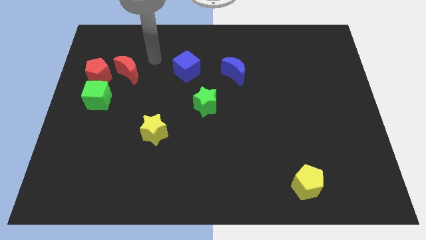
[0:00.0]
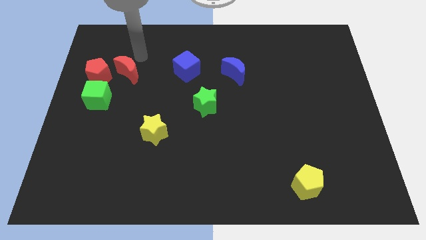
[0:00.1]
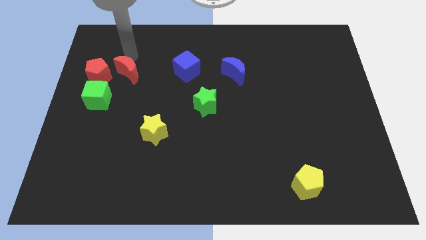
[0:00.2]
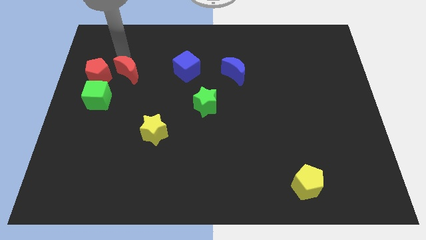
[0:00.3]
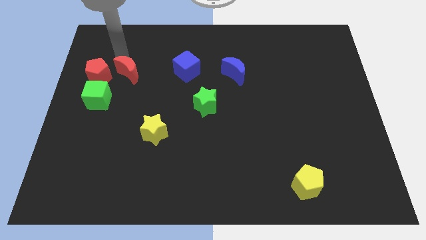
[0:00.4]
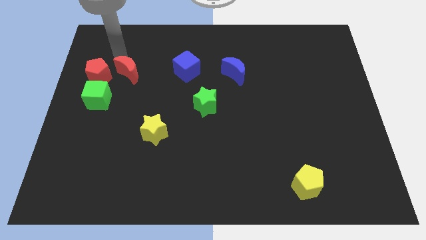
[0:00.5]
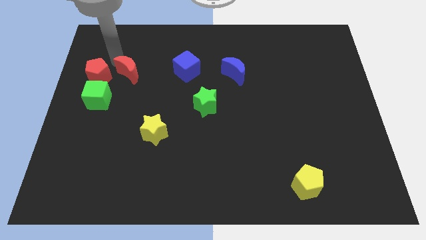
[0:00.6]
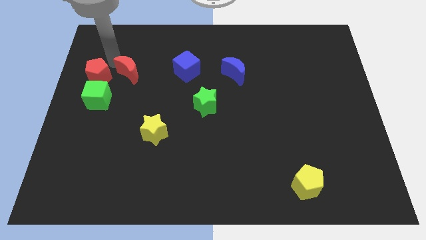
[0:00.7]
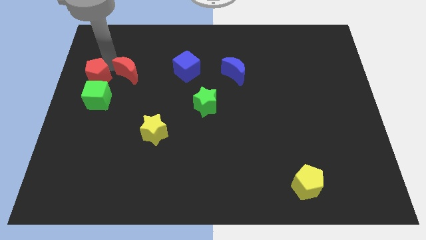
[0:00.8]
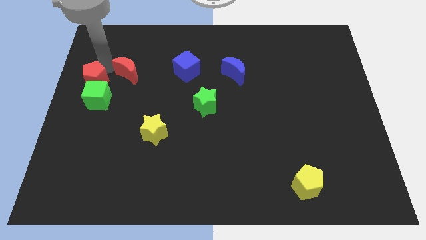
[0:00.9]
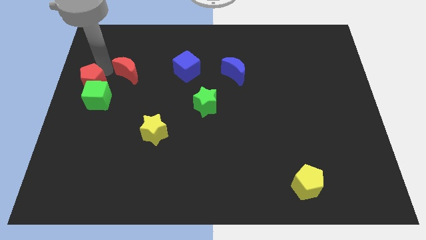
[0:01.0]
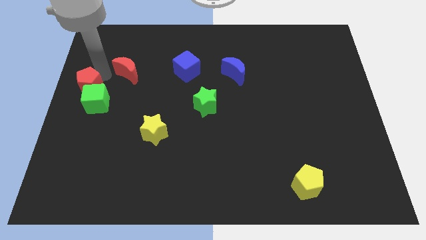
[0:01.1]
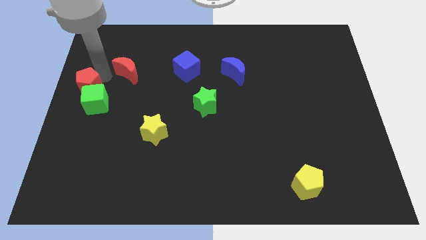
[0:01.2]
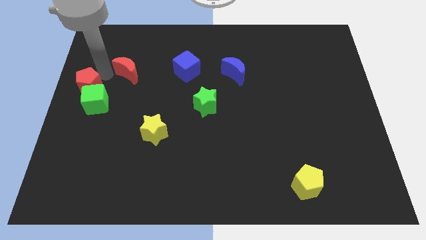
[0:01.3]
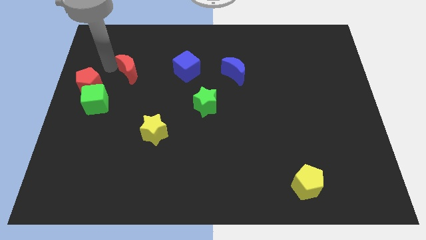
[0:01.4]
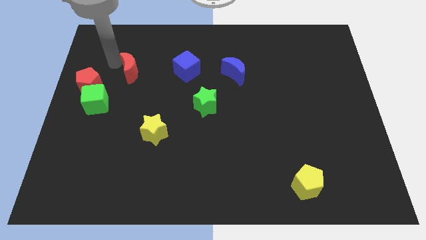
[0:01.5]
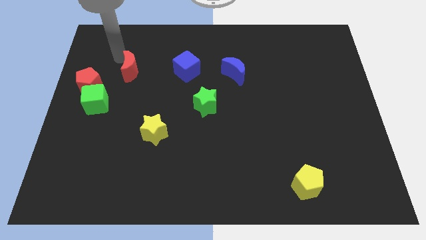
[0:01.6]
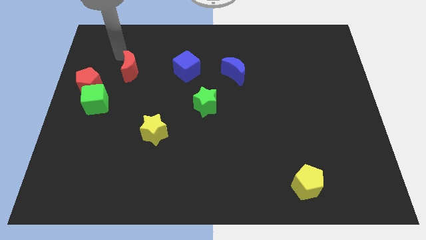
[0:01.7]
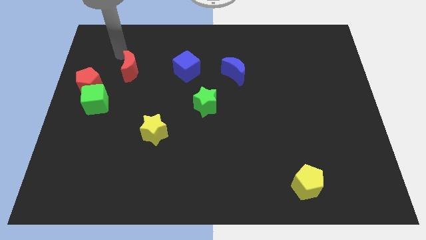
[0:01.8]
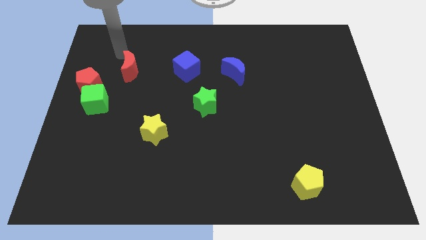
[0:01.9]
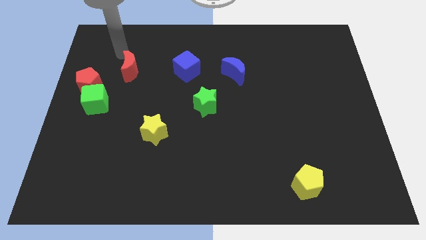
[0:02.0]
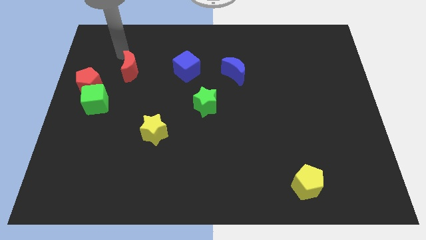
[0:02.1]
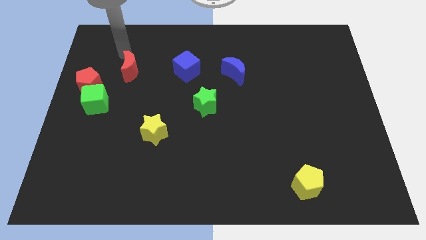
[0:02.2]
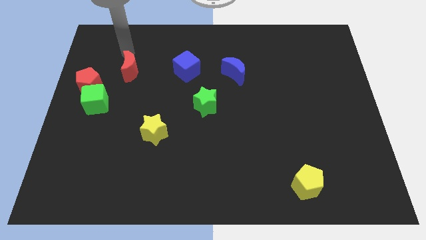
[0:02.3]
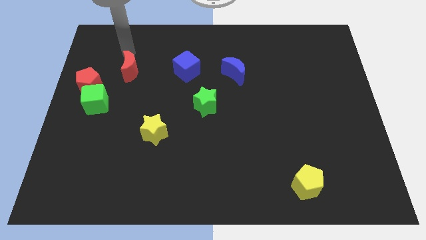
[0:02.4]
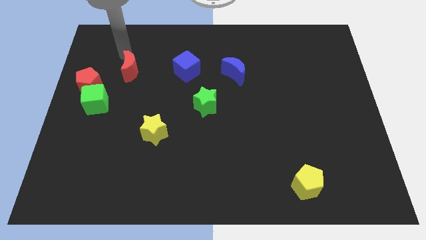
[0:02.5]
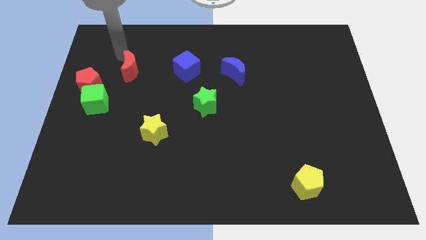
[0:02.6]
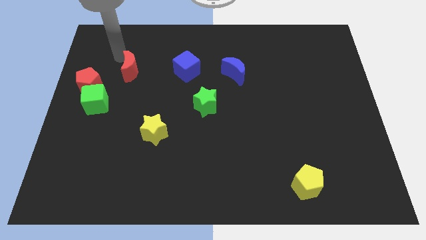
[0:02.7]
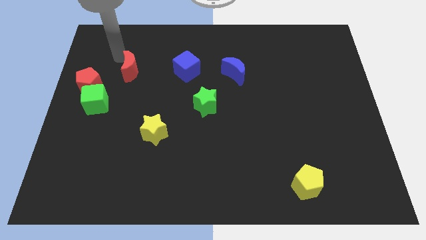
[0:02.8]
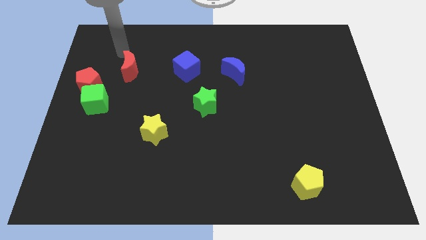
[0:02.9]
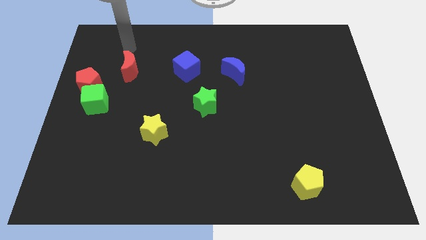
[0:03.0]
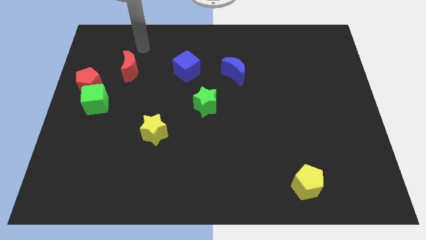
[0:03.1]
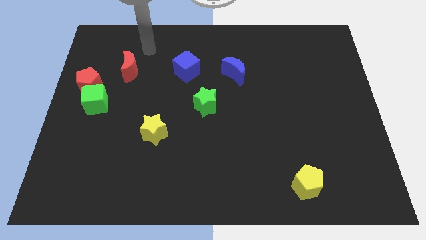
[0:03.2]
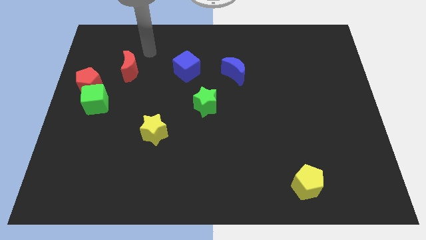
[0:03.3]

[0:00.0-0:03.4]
push the red pentagon into the green cube

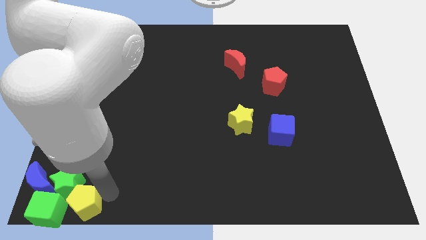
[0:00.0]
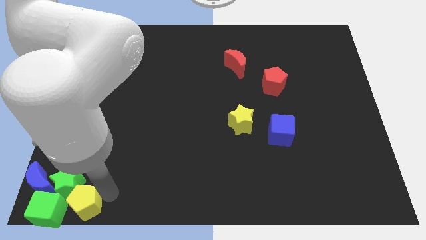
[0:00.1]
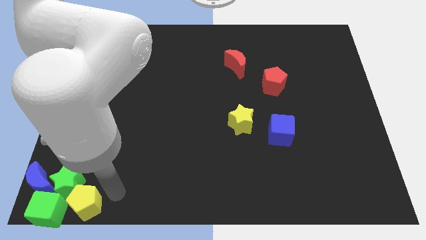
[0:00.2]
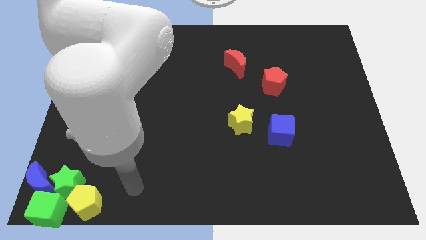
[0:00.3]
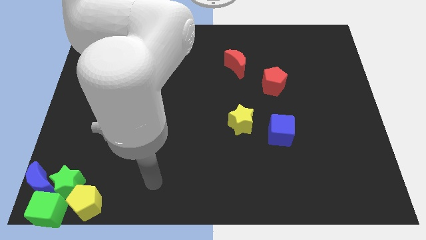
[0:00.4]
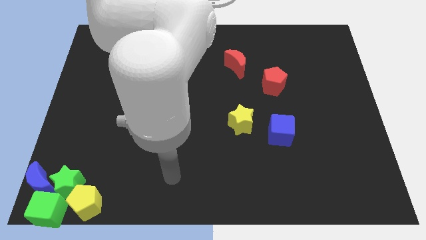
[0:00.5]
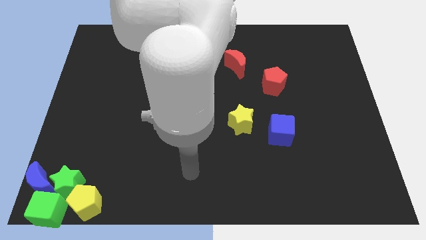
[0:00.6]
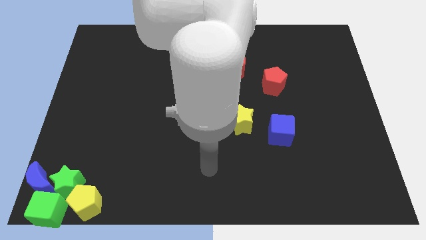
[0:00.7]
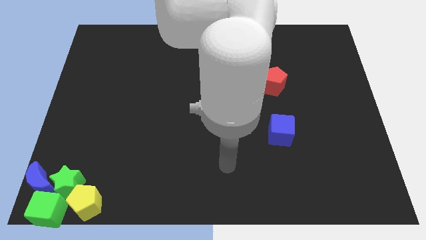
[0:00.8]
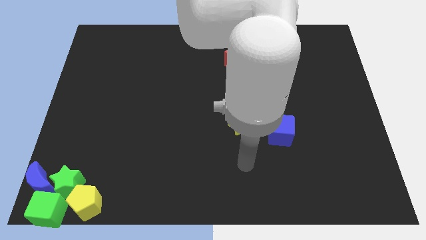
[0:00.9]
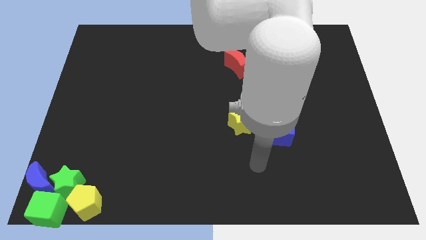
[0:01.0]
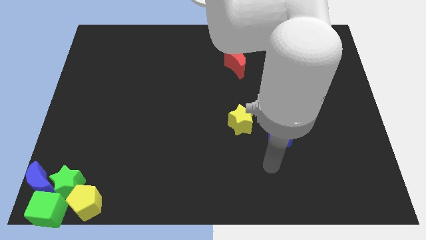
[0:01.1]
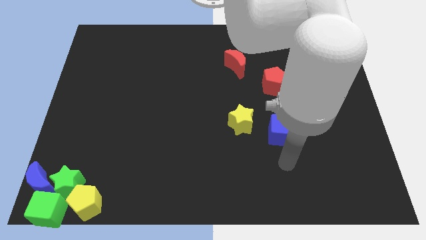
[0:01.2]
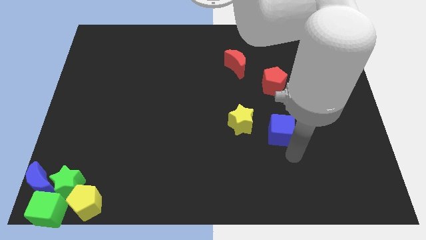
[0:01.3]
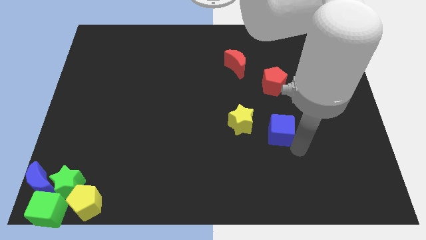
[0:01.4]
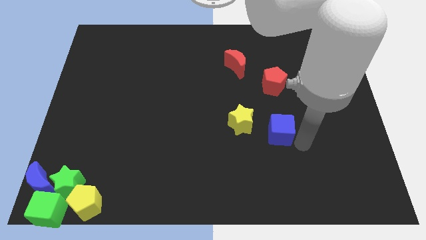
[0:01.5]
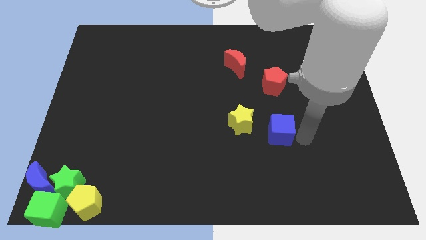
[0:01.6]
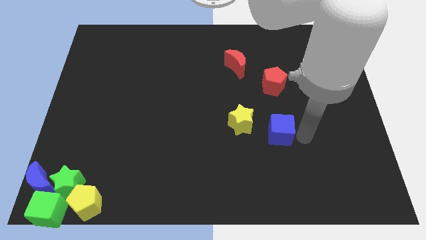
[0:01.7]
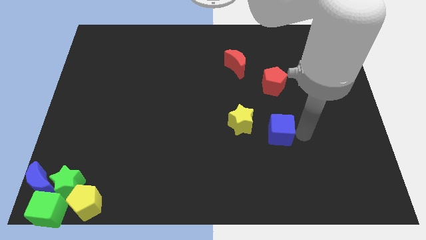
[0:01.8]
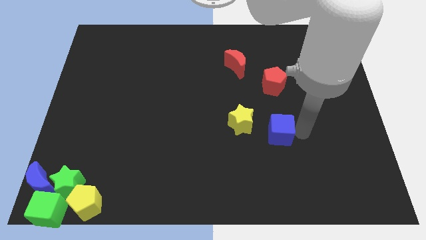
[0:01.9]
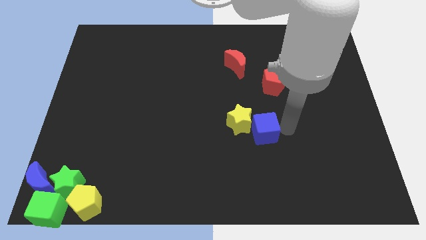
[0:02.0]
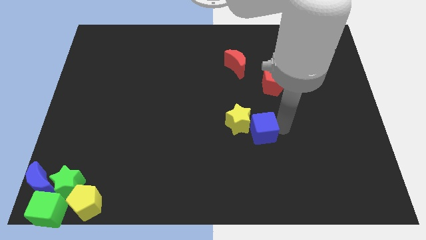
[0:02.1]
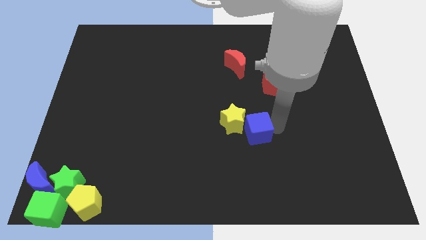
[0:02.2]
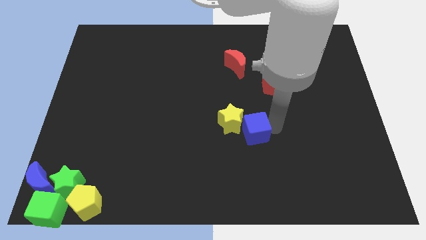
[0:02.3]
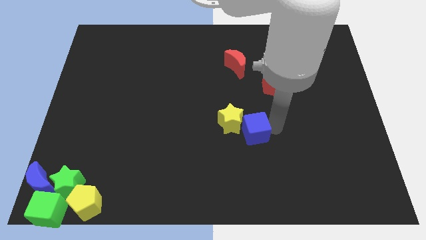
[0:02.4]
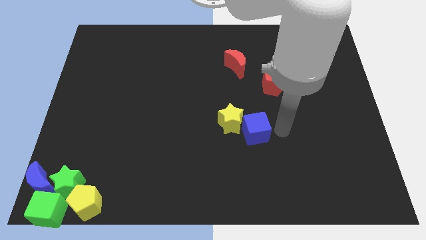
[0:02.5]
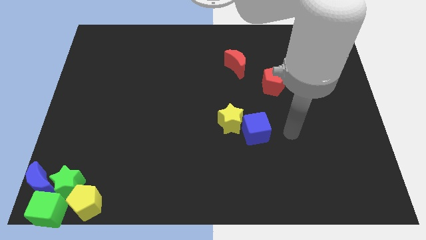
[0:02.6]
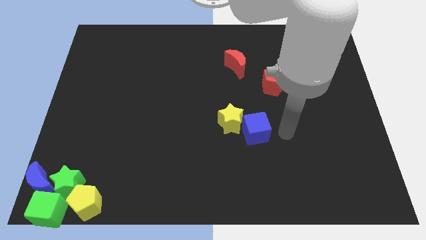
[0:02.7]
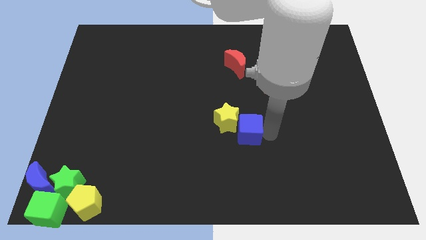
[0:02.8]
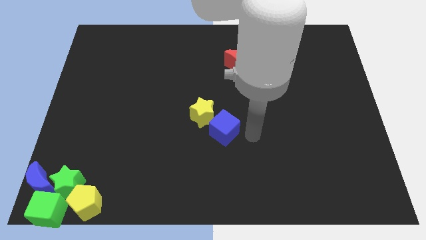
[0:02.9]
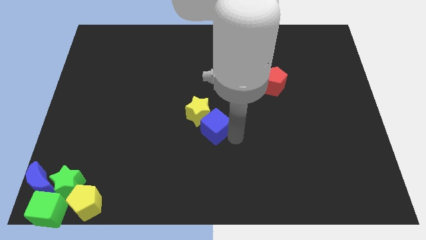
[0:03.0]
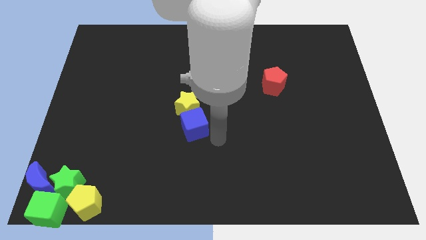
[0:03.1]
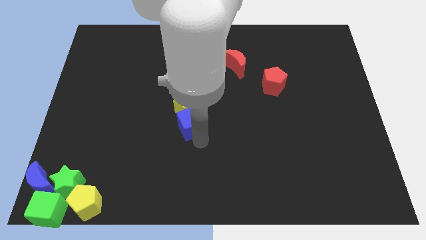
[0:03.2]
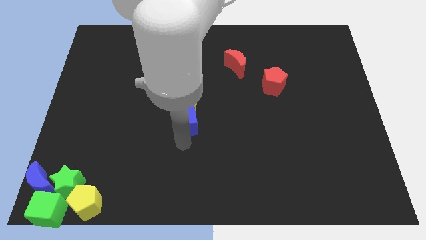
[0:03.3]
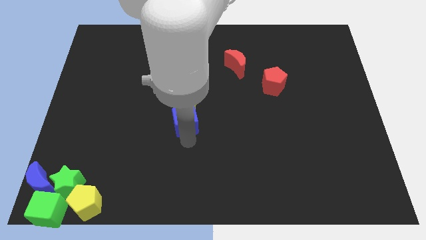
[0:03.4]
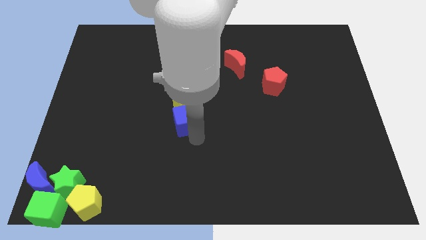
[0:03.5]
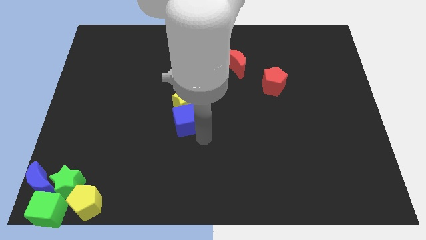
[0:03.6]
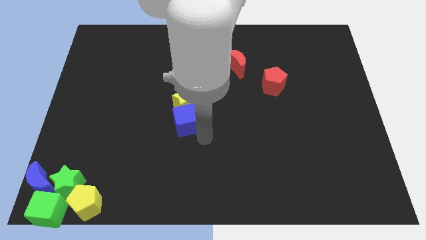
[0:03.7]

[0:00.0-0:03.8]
push the blue cube along with the yellow star towards the left side

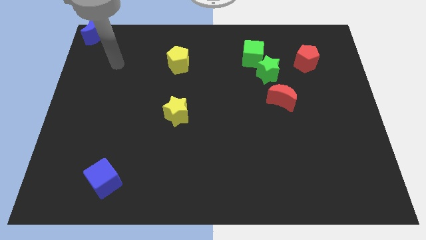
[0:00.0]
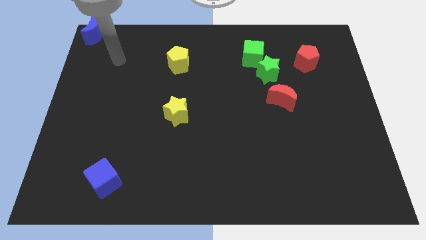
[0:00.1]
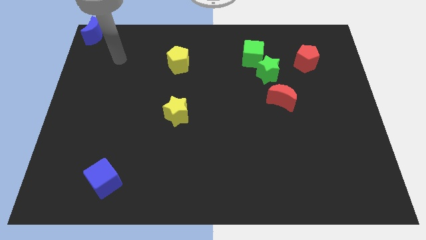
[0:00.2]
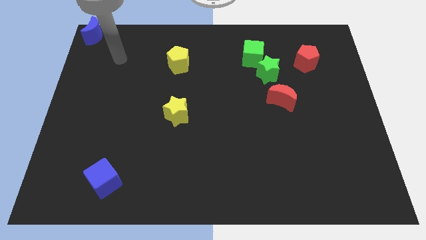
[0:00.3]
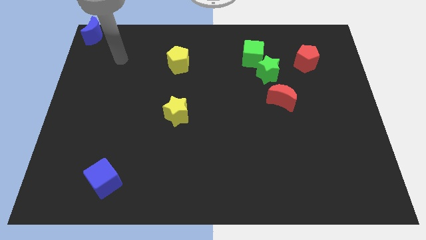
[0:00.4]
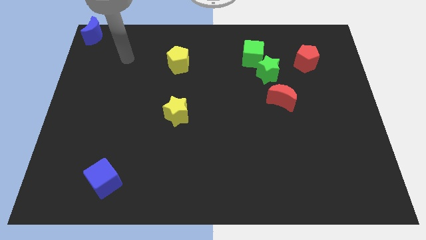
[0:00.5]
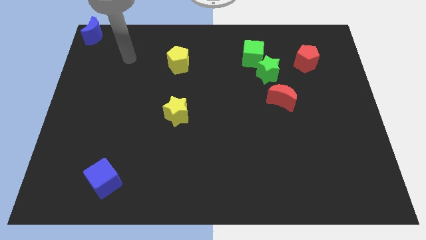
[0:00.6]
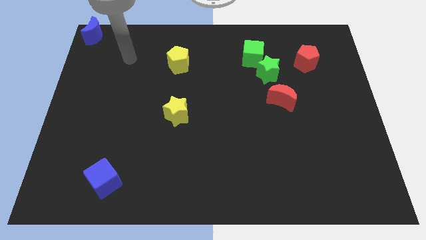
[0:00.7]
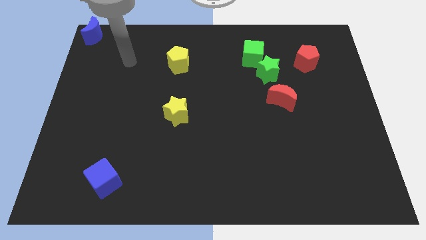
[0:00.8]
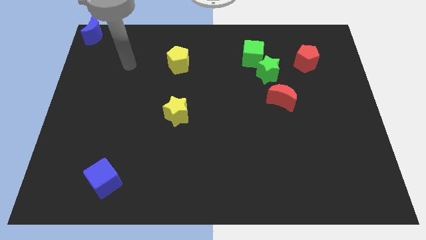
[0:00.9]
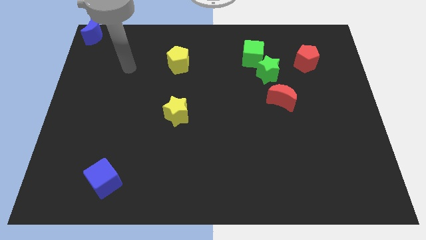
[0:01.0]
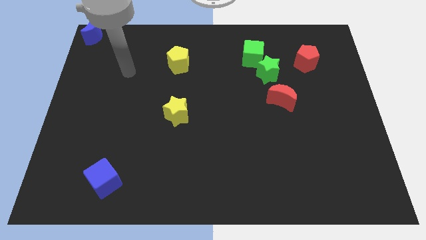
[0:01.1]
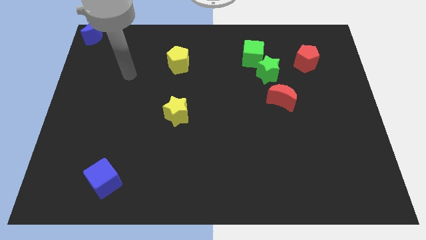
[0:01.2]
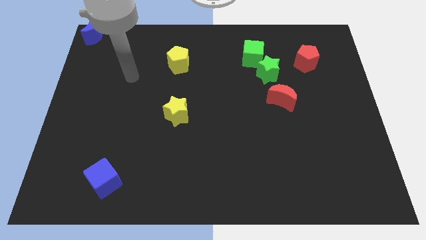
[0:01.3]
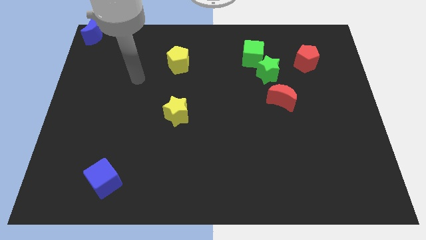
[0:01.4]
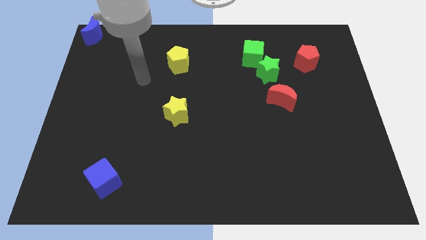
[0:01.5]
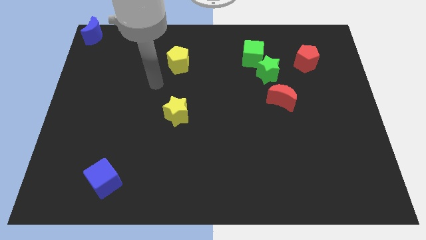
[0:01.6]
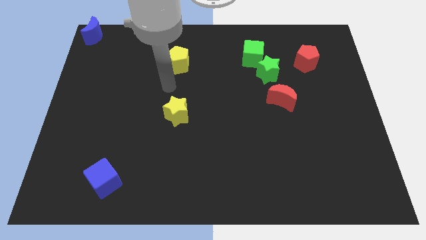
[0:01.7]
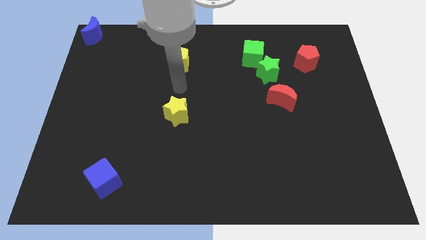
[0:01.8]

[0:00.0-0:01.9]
place your arm in between both the yellow blocks
